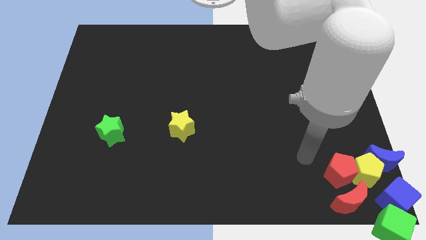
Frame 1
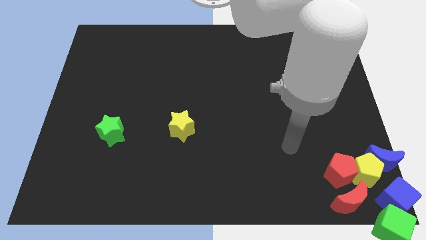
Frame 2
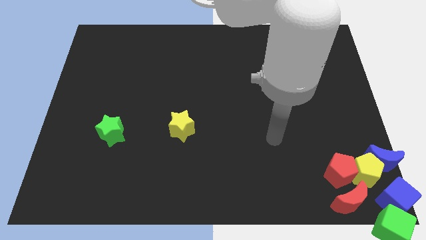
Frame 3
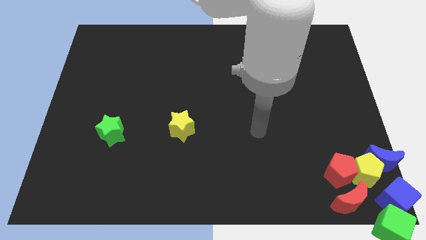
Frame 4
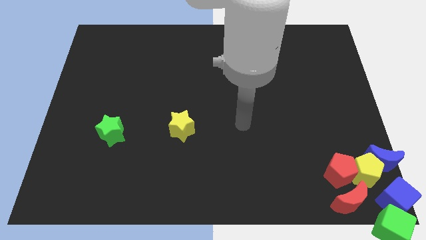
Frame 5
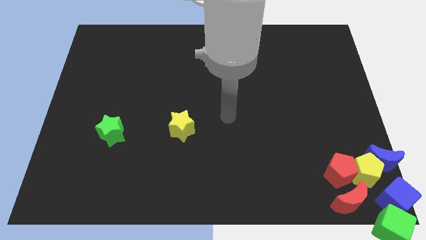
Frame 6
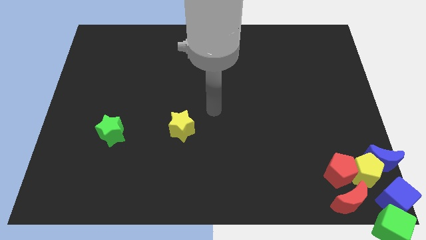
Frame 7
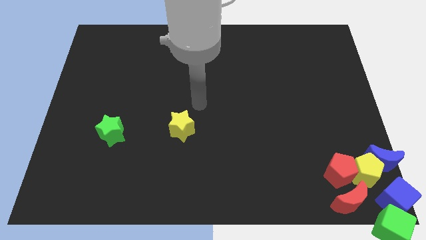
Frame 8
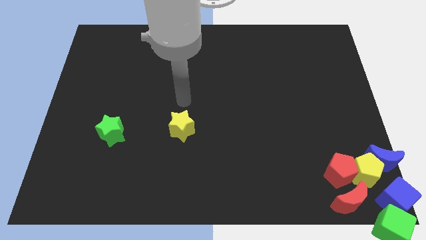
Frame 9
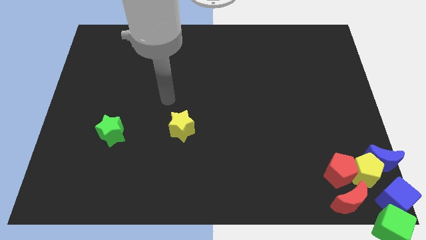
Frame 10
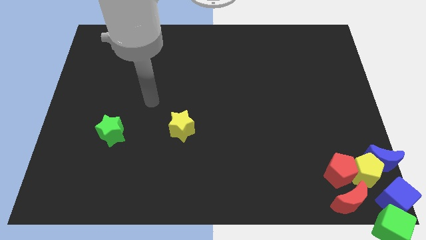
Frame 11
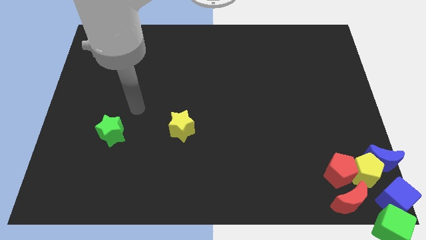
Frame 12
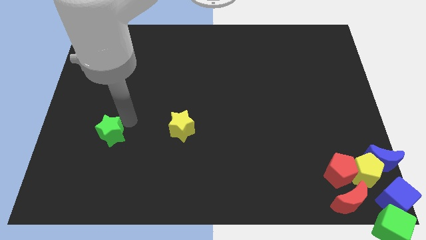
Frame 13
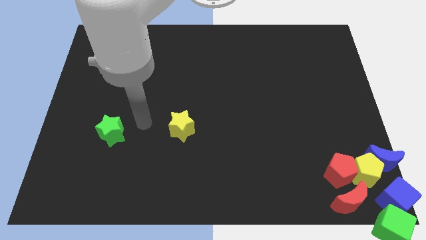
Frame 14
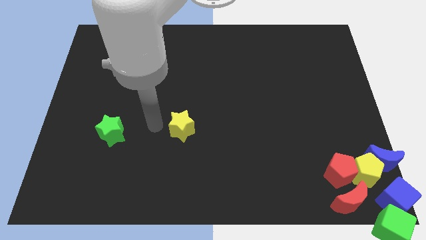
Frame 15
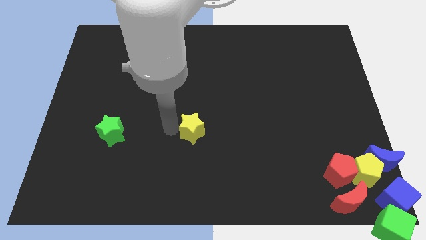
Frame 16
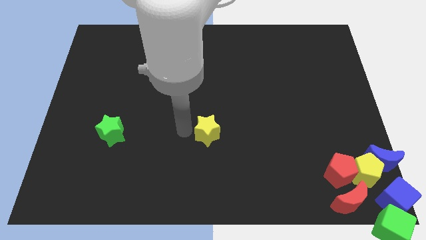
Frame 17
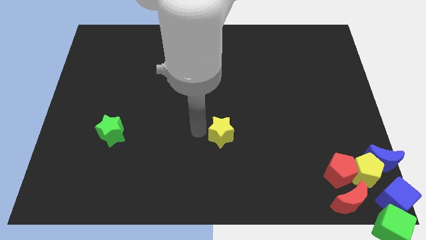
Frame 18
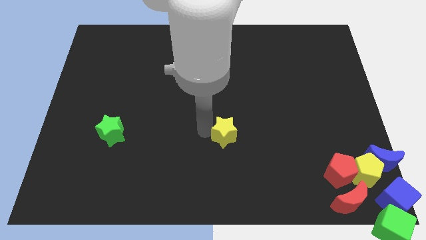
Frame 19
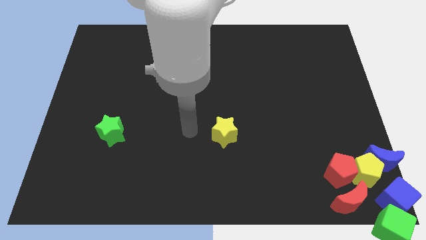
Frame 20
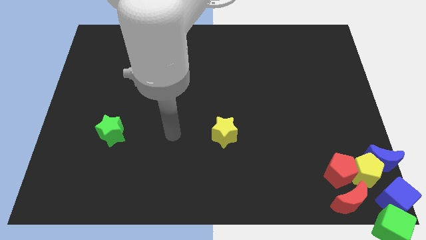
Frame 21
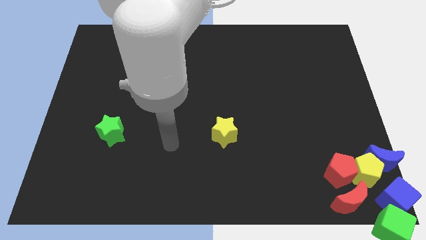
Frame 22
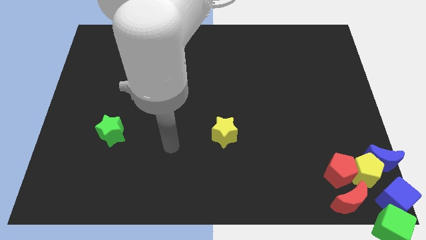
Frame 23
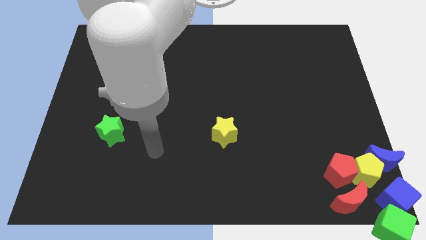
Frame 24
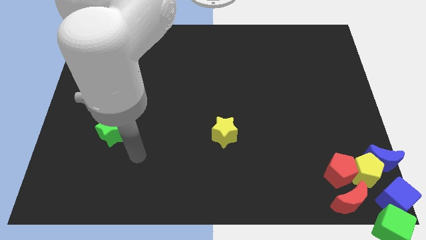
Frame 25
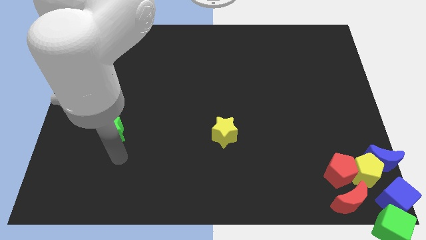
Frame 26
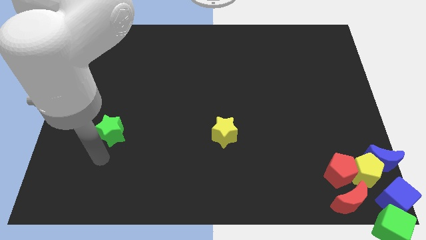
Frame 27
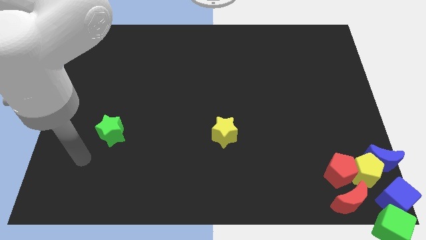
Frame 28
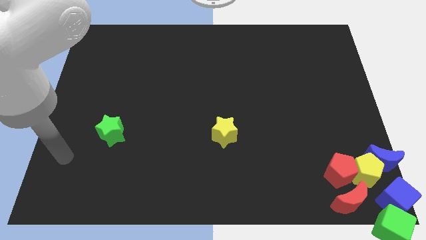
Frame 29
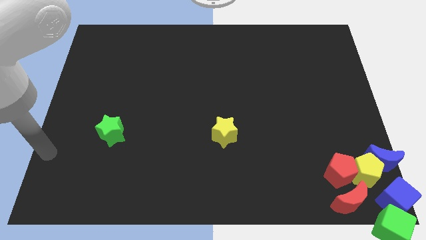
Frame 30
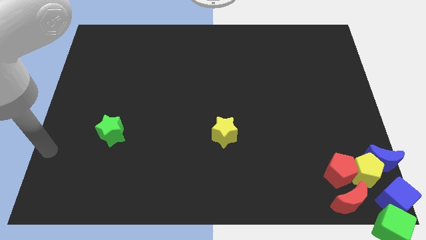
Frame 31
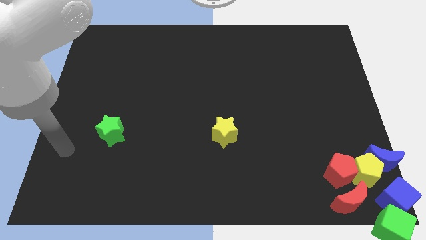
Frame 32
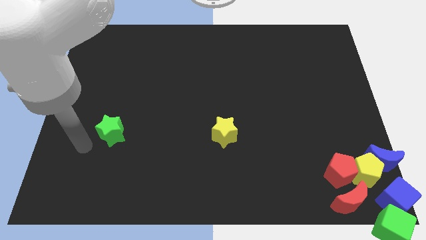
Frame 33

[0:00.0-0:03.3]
move the yellow star to the right side slightly

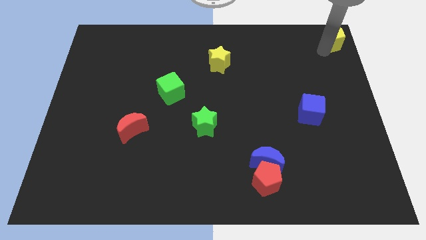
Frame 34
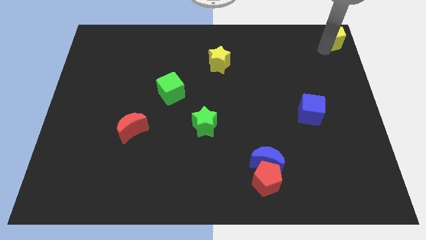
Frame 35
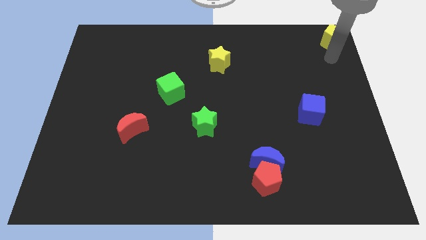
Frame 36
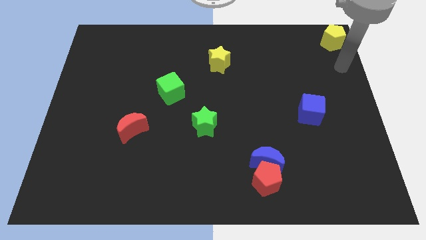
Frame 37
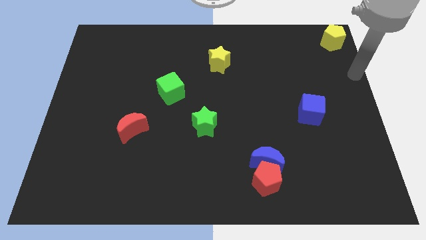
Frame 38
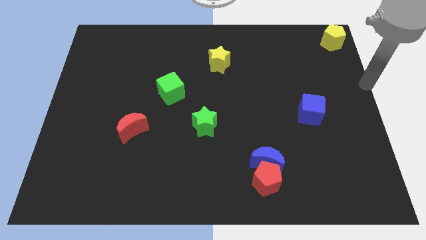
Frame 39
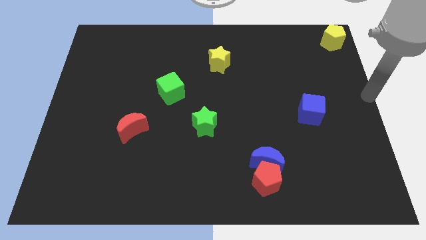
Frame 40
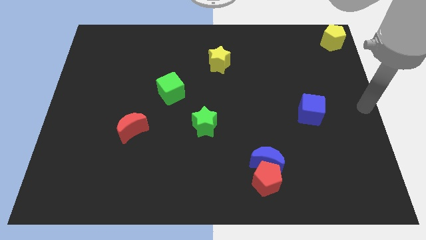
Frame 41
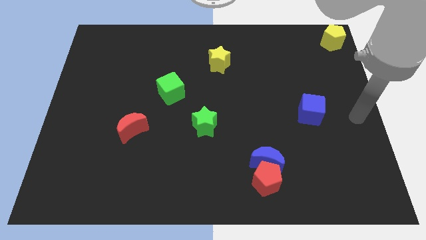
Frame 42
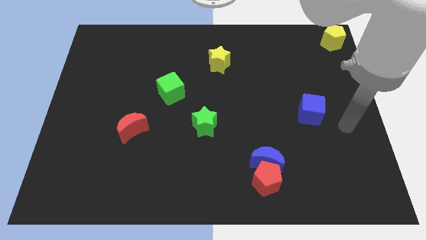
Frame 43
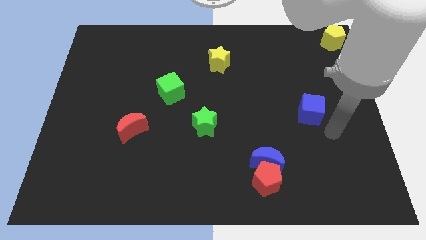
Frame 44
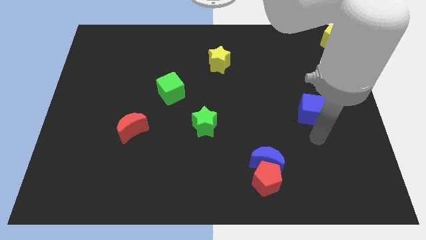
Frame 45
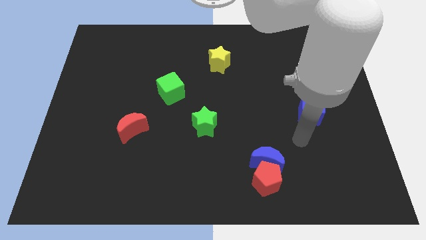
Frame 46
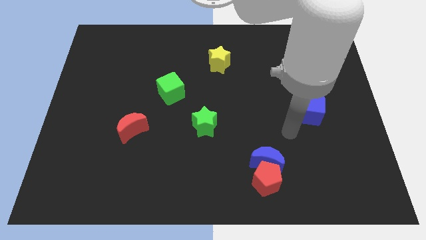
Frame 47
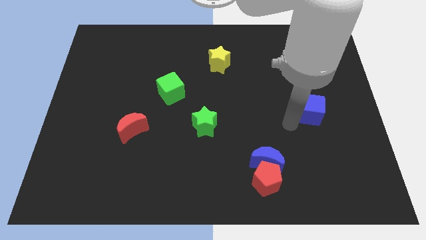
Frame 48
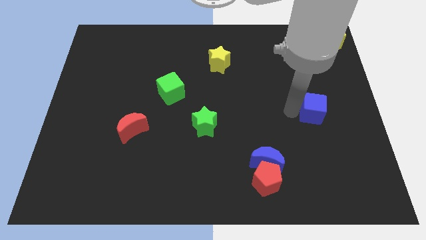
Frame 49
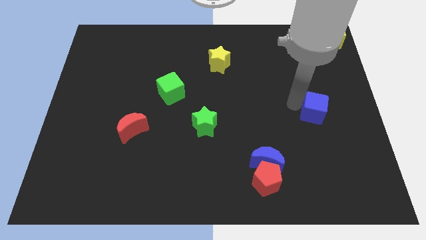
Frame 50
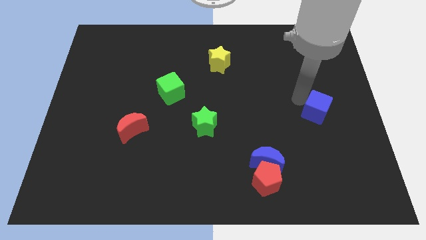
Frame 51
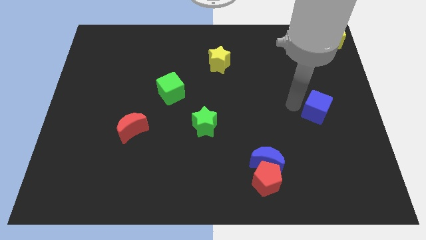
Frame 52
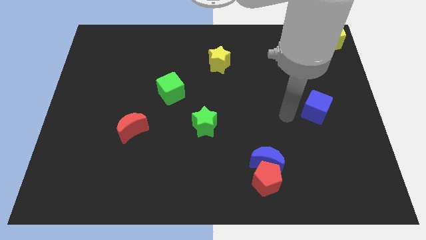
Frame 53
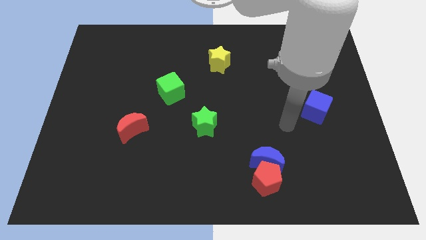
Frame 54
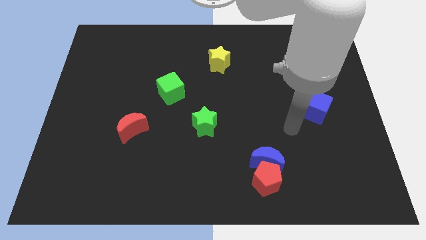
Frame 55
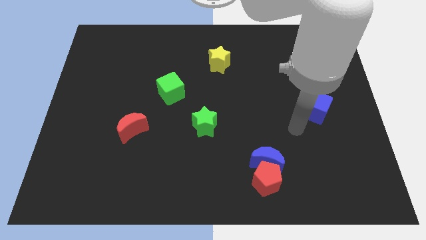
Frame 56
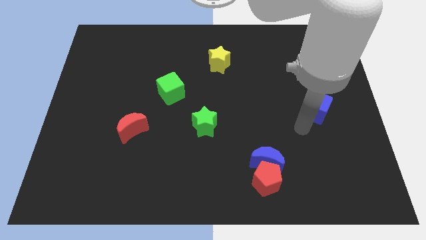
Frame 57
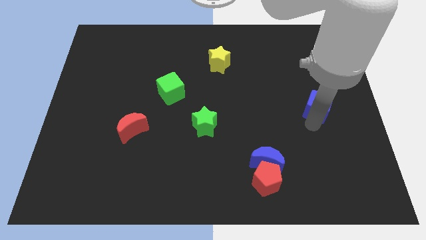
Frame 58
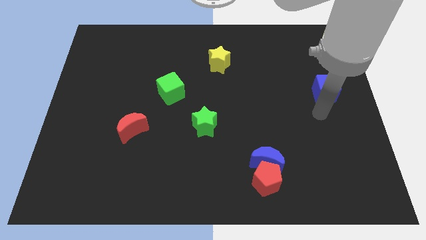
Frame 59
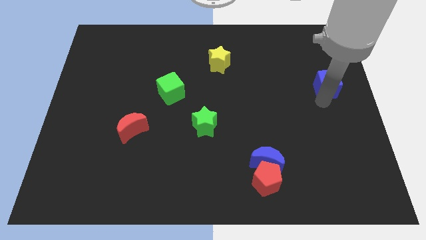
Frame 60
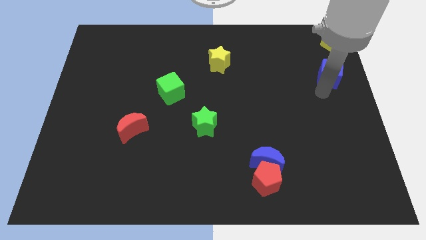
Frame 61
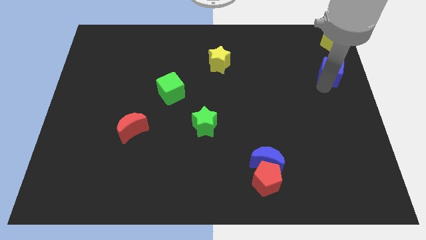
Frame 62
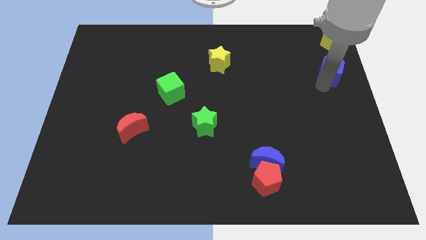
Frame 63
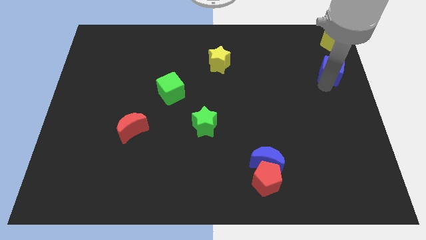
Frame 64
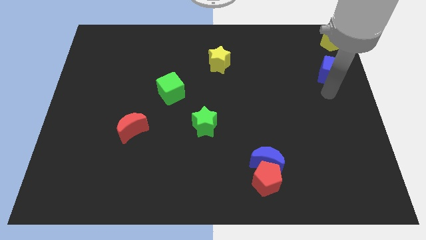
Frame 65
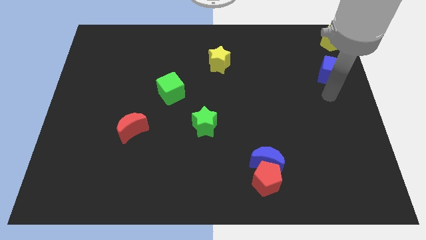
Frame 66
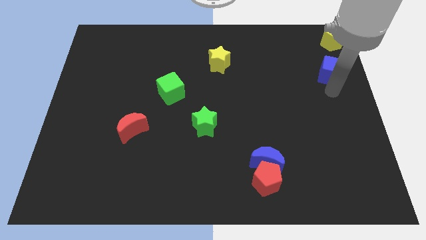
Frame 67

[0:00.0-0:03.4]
move the blue cube towards the yellow pentagon

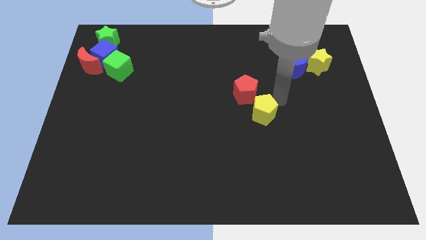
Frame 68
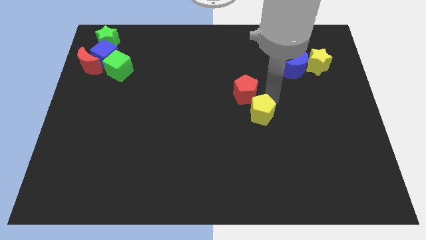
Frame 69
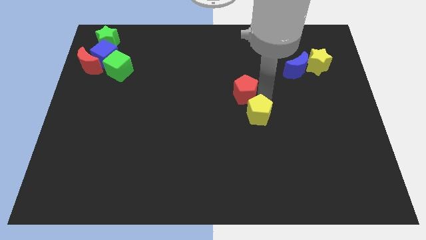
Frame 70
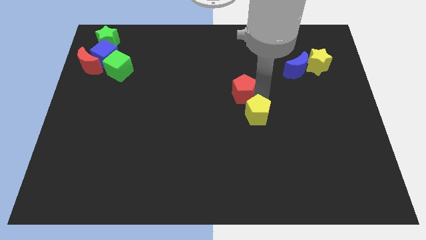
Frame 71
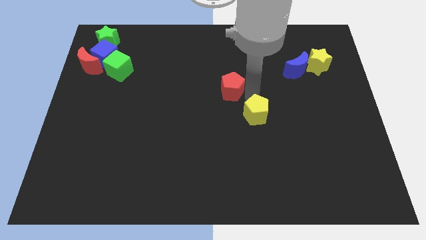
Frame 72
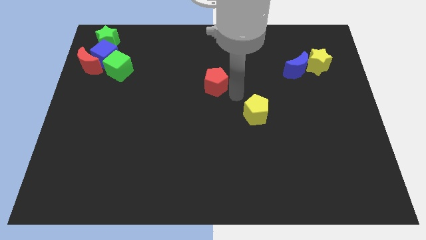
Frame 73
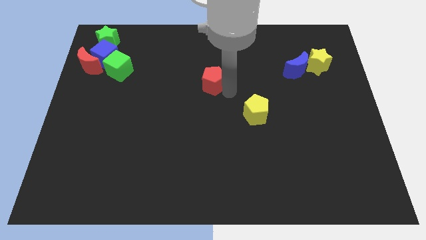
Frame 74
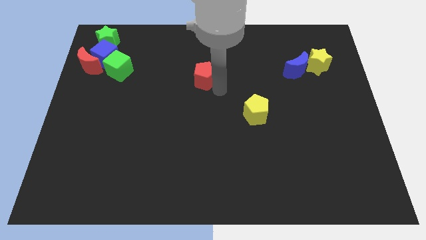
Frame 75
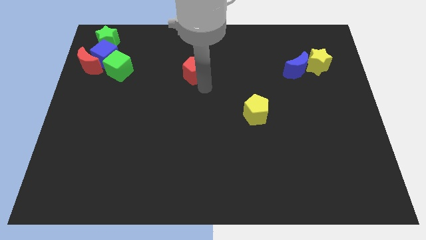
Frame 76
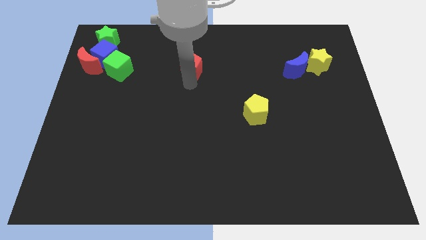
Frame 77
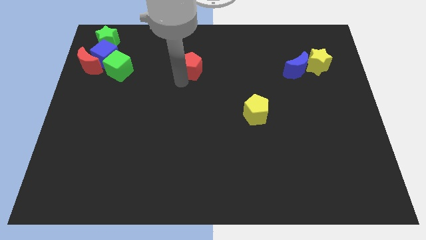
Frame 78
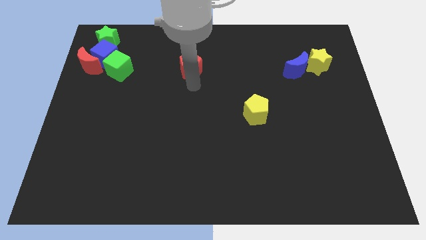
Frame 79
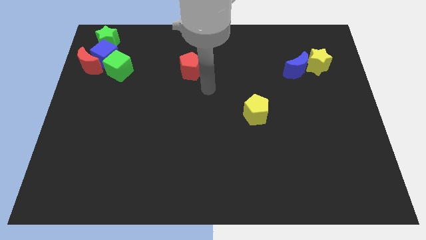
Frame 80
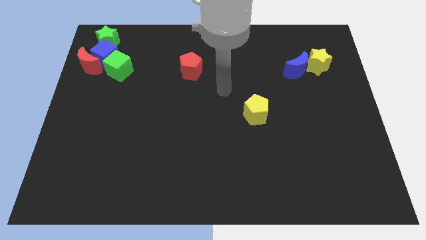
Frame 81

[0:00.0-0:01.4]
push the red pentagon to the top center of the board

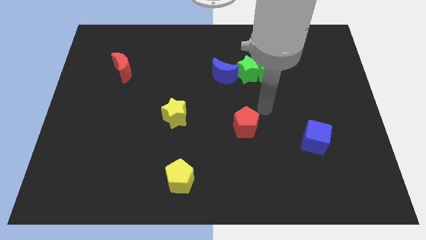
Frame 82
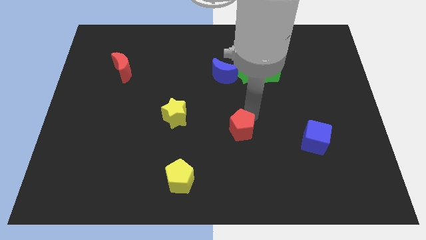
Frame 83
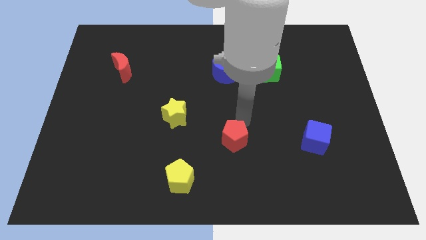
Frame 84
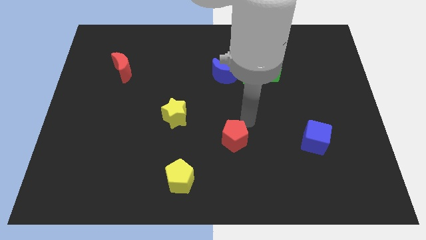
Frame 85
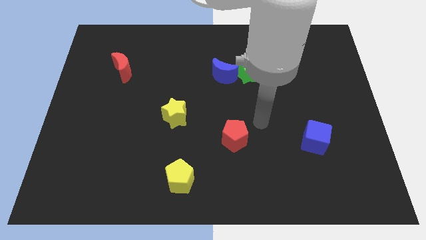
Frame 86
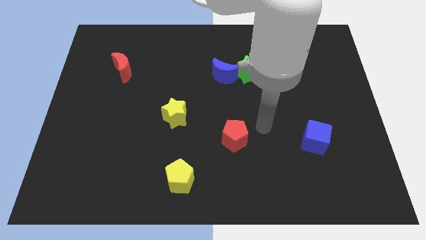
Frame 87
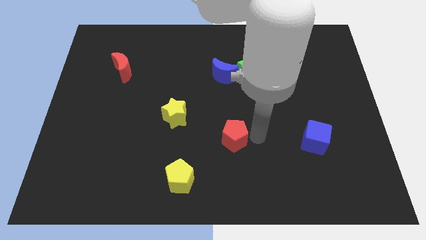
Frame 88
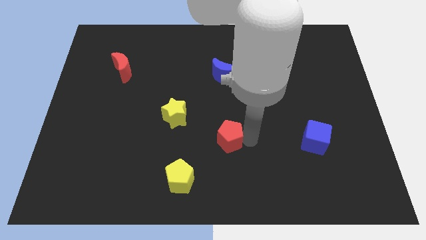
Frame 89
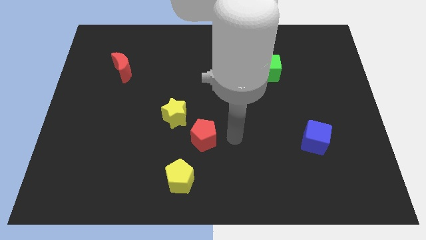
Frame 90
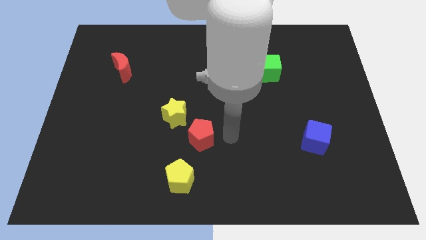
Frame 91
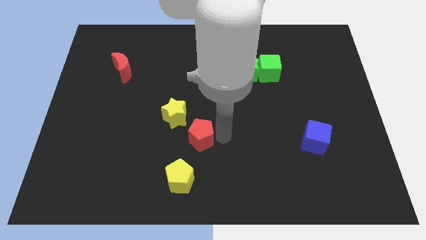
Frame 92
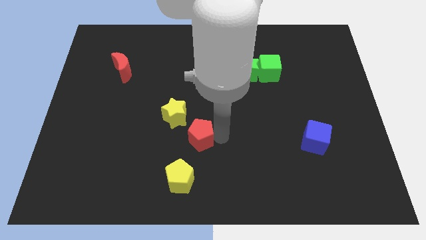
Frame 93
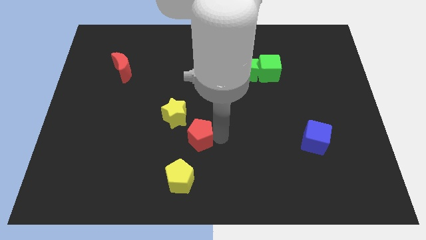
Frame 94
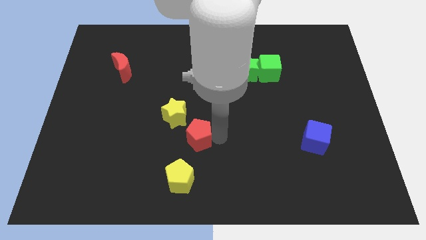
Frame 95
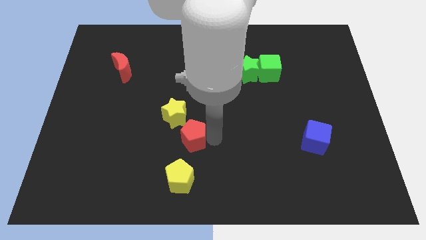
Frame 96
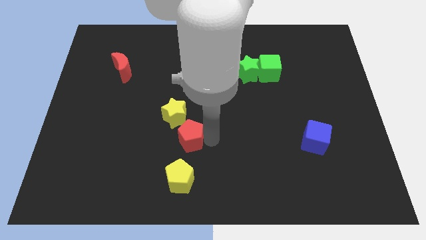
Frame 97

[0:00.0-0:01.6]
move the red pentagon below to the yellow star
